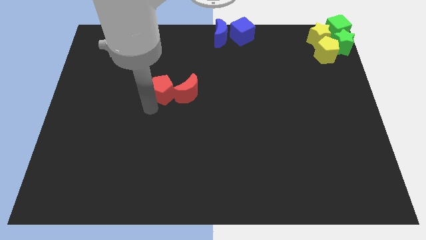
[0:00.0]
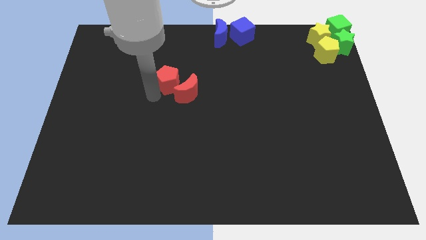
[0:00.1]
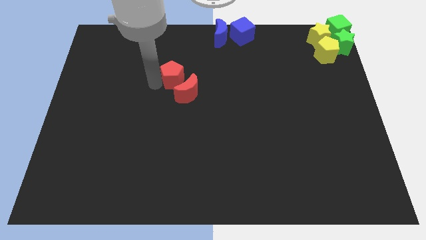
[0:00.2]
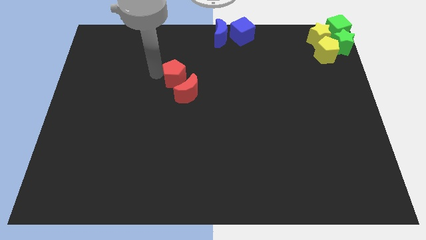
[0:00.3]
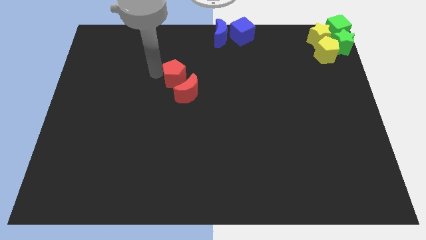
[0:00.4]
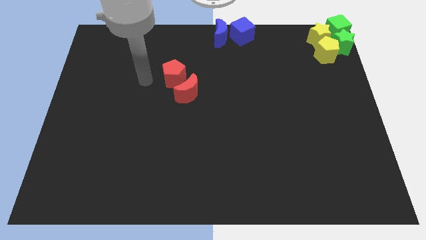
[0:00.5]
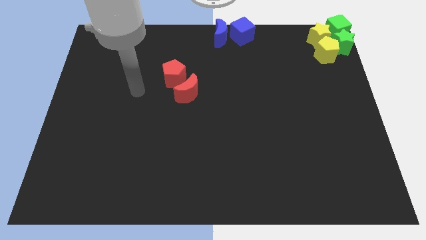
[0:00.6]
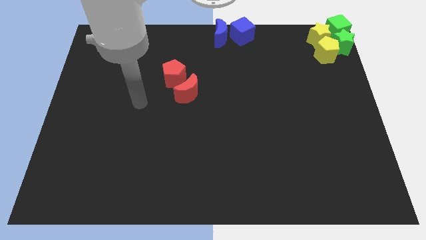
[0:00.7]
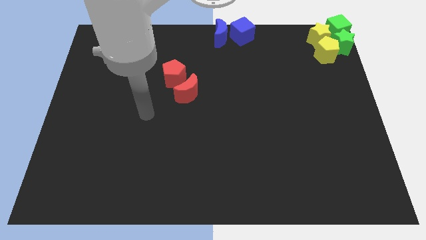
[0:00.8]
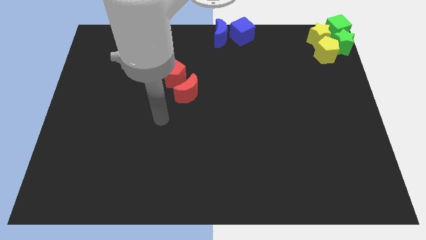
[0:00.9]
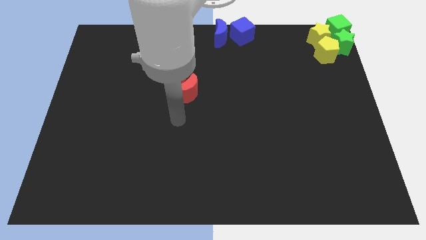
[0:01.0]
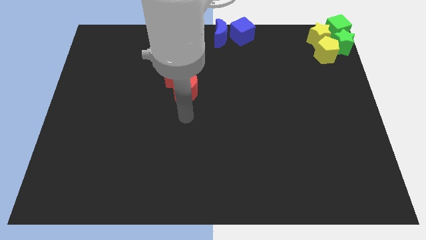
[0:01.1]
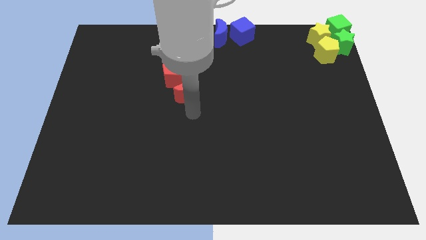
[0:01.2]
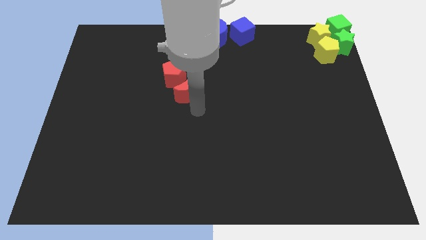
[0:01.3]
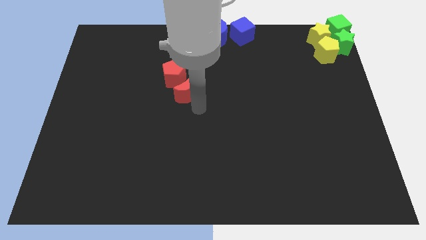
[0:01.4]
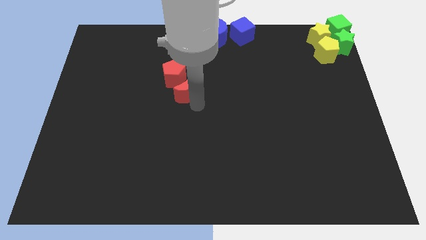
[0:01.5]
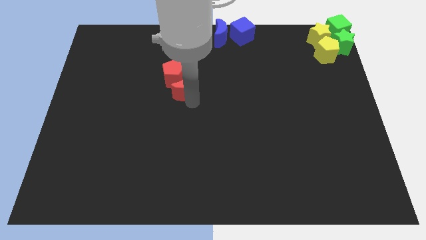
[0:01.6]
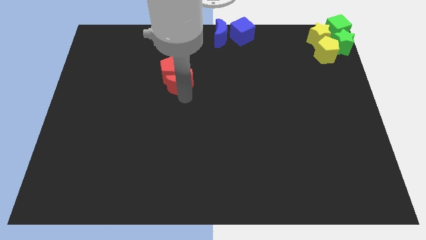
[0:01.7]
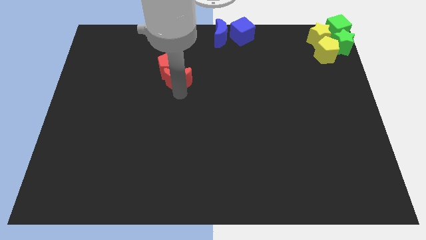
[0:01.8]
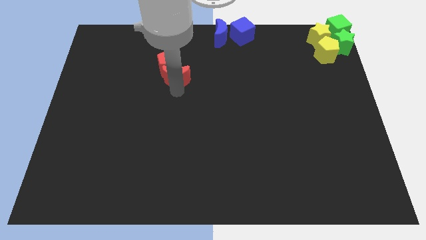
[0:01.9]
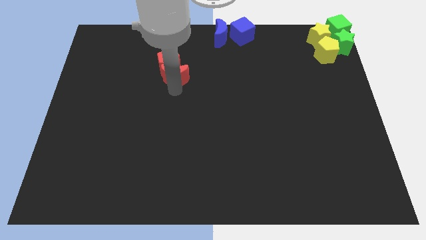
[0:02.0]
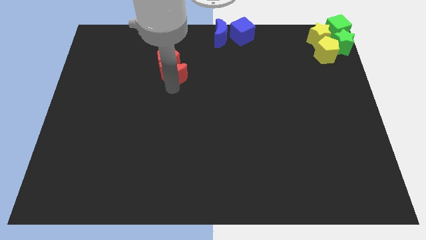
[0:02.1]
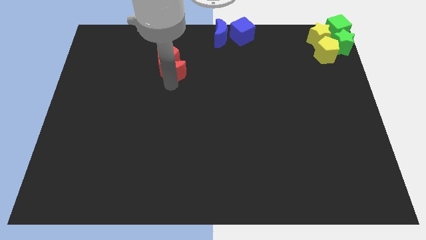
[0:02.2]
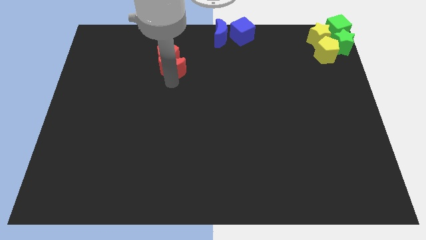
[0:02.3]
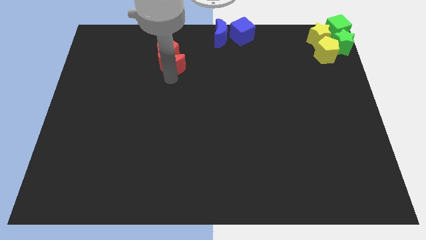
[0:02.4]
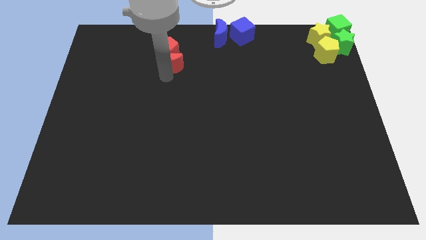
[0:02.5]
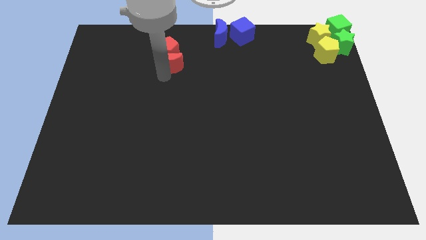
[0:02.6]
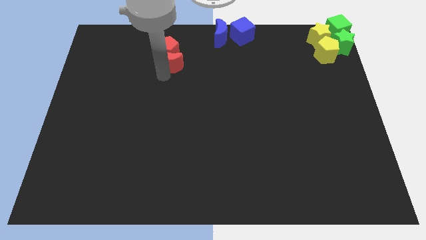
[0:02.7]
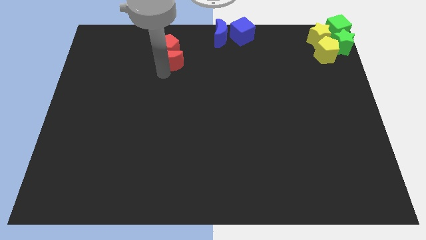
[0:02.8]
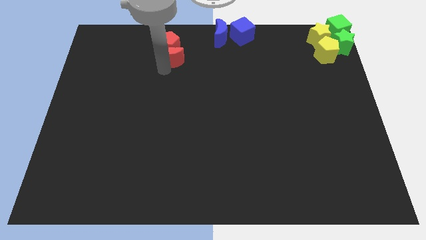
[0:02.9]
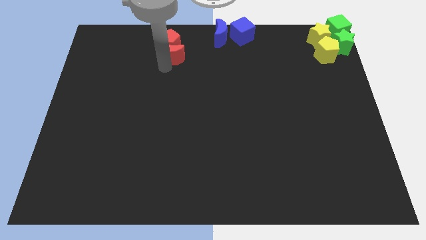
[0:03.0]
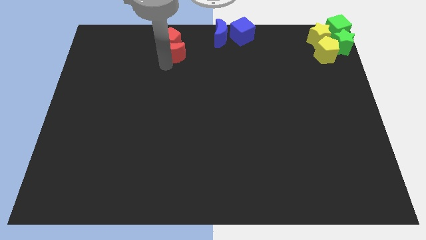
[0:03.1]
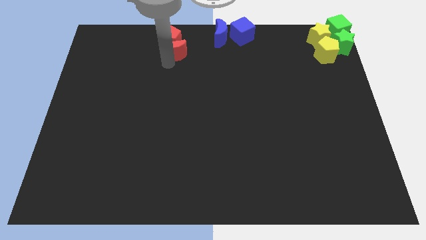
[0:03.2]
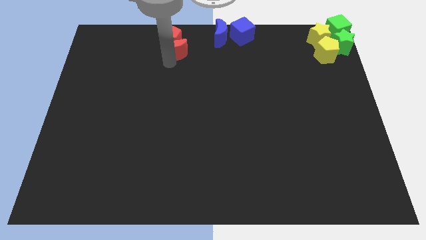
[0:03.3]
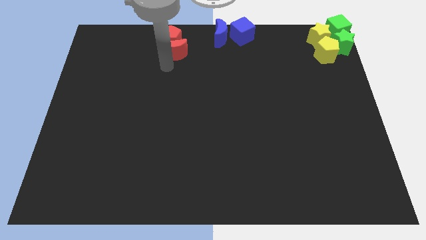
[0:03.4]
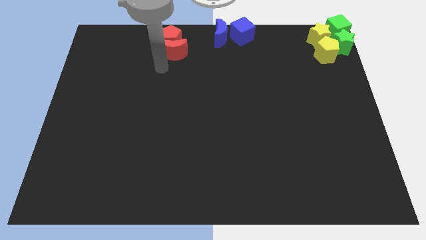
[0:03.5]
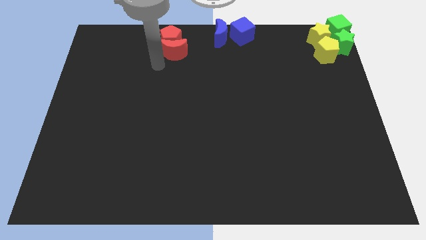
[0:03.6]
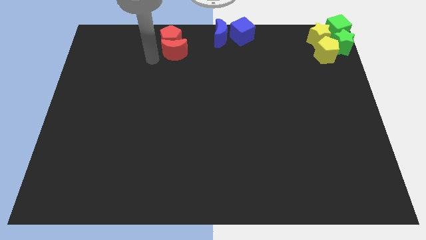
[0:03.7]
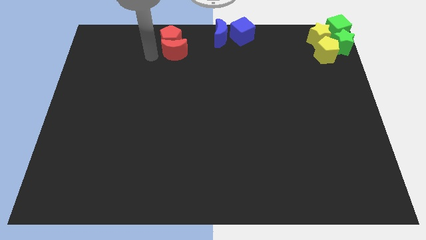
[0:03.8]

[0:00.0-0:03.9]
push both red pentagon and red crescent towards the top center of the board

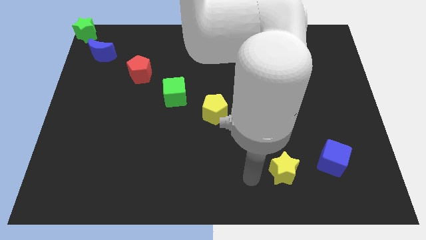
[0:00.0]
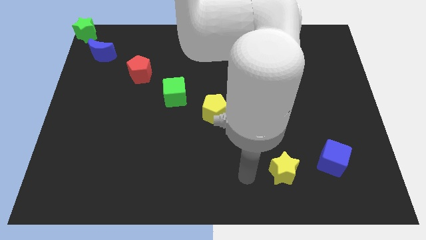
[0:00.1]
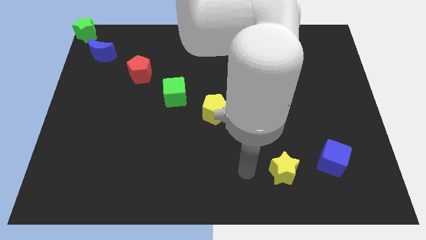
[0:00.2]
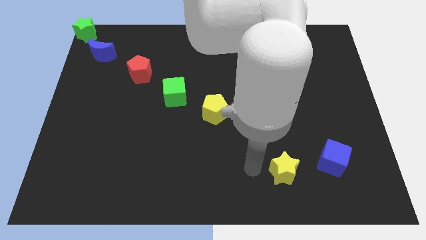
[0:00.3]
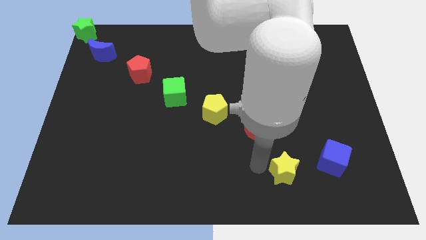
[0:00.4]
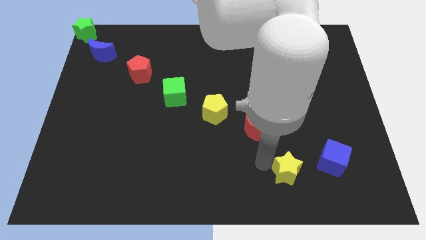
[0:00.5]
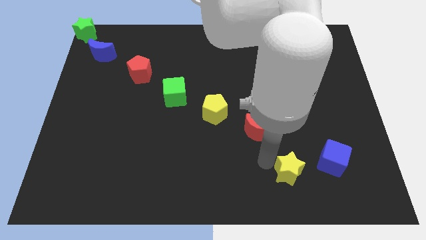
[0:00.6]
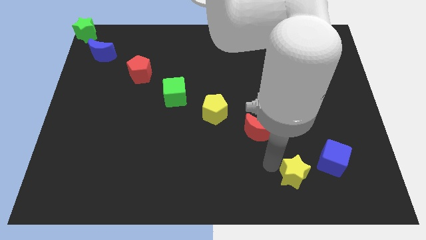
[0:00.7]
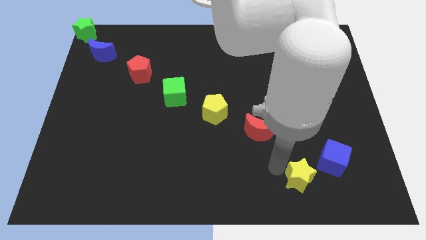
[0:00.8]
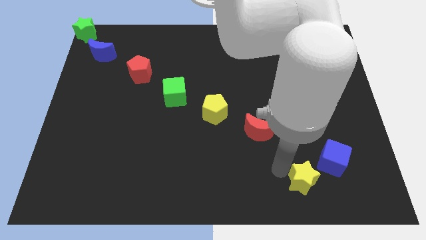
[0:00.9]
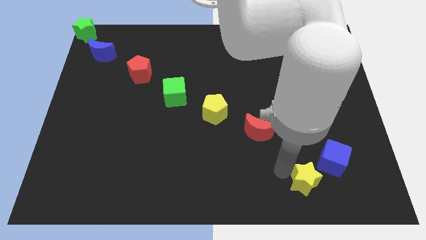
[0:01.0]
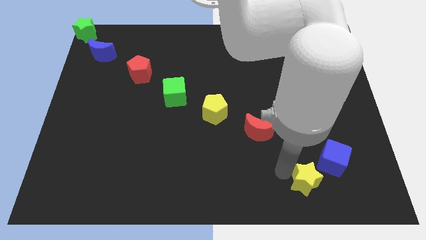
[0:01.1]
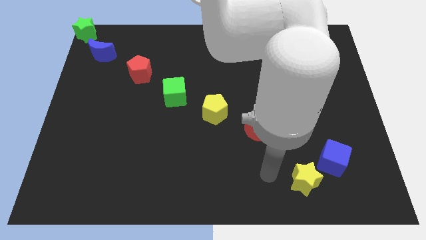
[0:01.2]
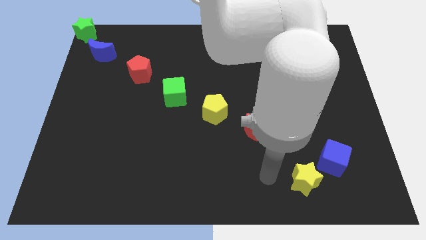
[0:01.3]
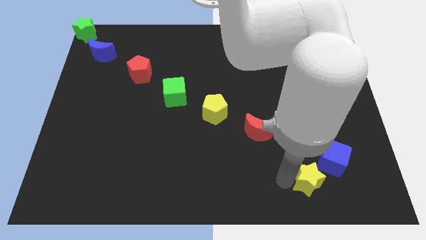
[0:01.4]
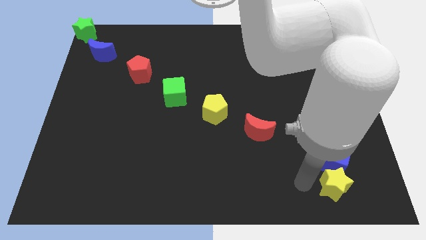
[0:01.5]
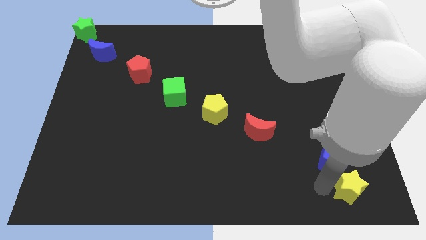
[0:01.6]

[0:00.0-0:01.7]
place the yellow star at the bottom of blue cube

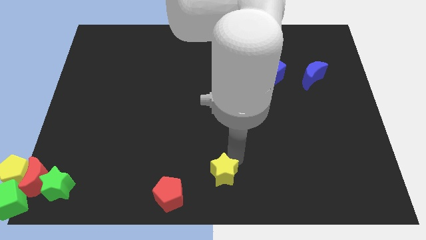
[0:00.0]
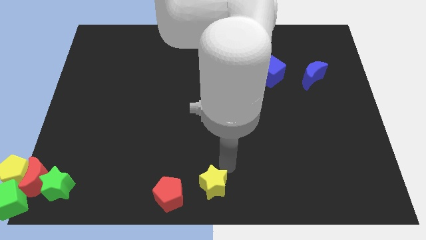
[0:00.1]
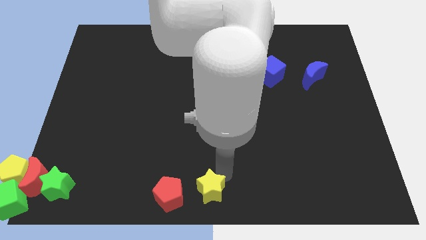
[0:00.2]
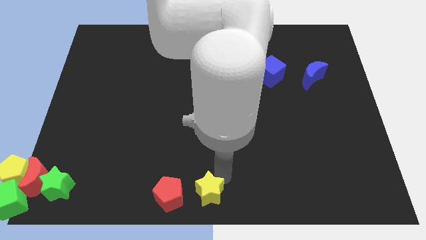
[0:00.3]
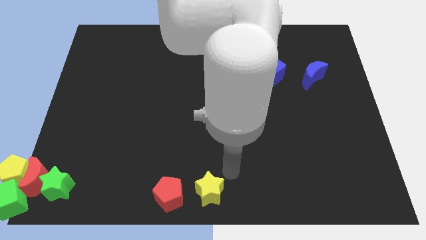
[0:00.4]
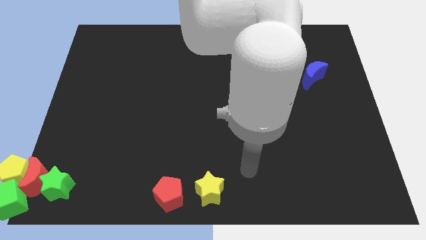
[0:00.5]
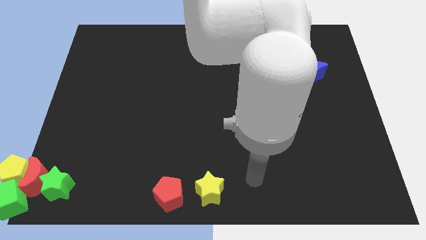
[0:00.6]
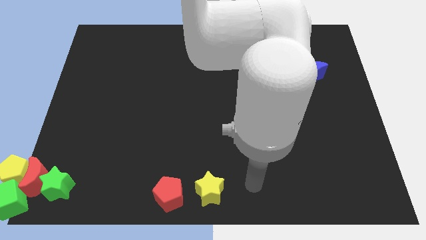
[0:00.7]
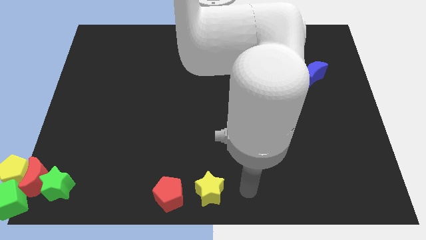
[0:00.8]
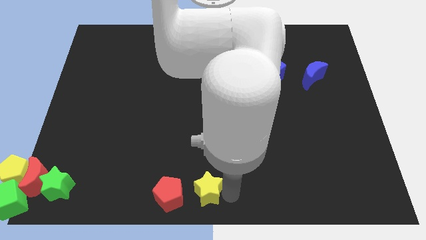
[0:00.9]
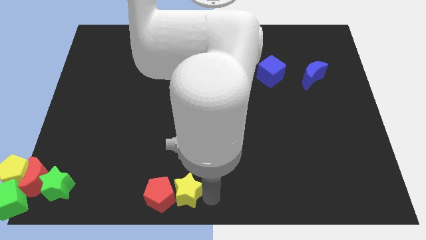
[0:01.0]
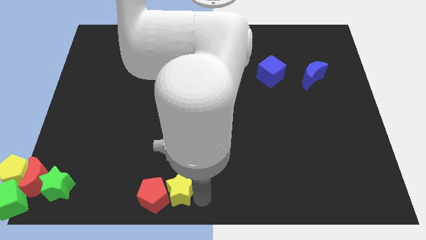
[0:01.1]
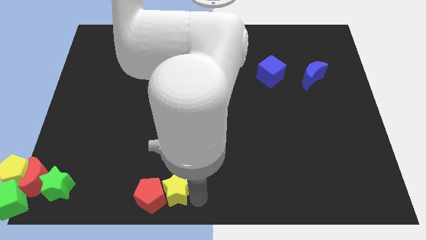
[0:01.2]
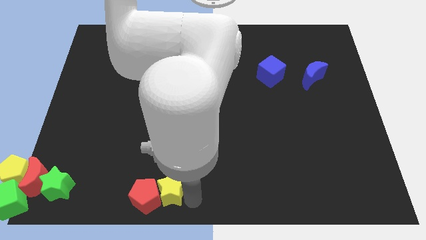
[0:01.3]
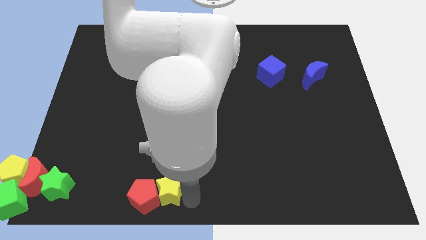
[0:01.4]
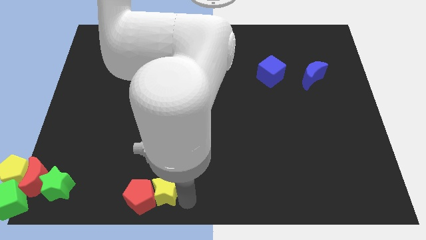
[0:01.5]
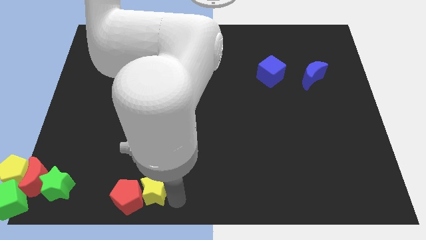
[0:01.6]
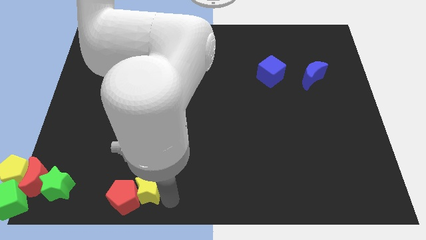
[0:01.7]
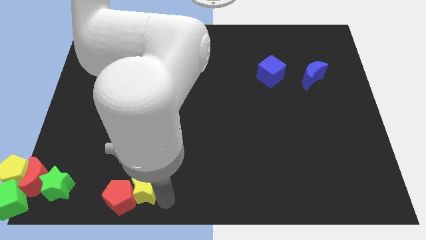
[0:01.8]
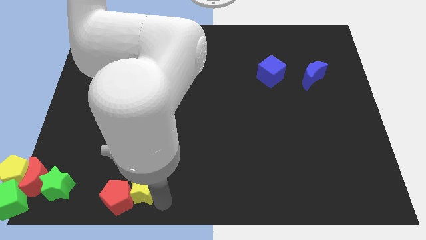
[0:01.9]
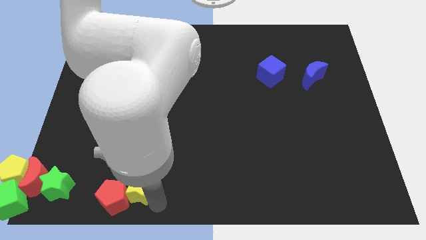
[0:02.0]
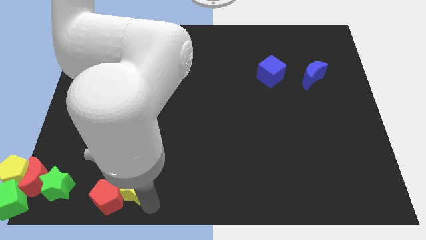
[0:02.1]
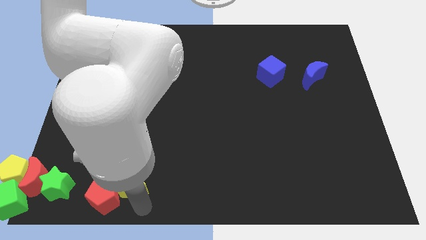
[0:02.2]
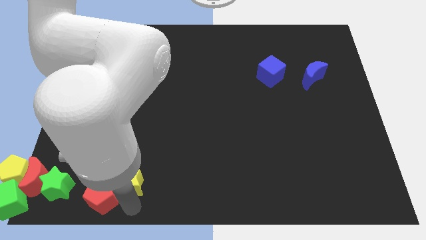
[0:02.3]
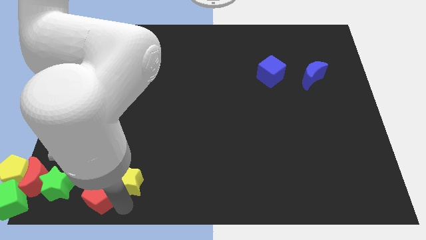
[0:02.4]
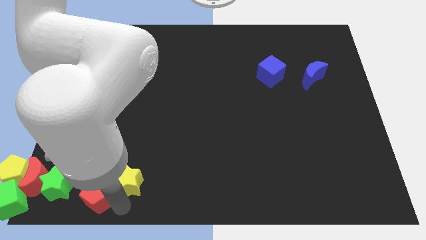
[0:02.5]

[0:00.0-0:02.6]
push the yellow star along with the red pentagon towards the bottom left side of blocks

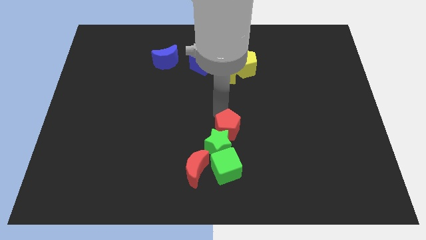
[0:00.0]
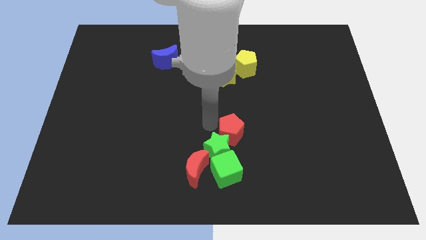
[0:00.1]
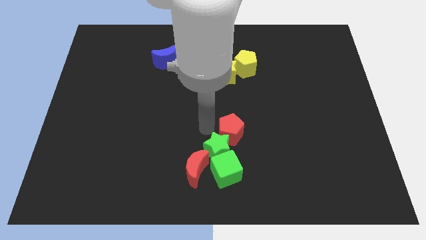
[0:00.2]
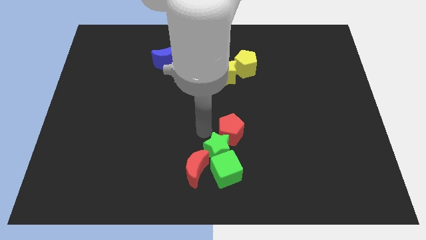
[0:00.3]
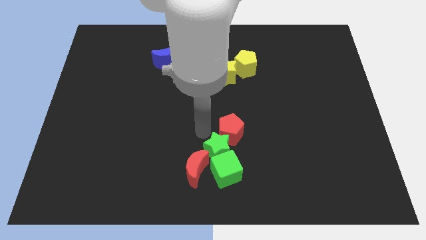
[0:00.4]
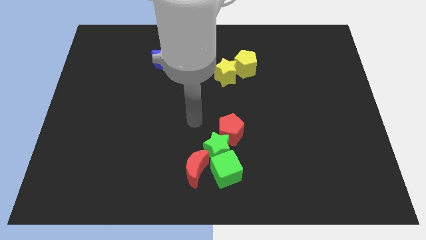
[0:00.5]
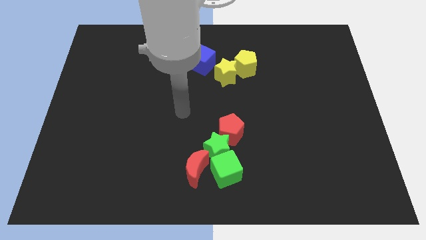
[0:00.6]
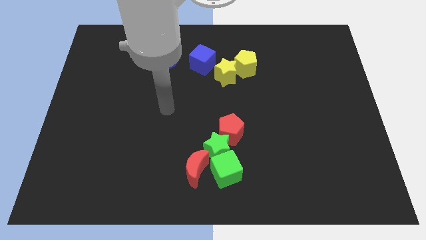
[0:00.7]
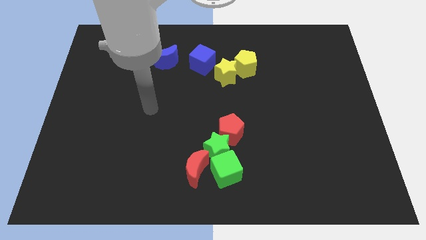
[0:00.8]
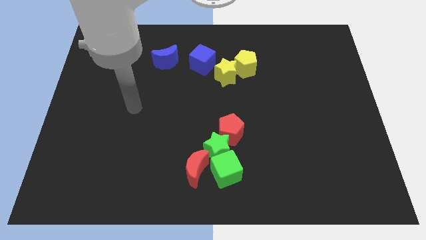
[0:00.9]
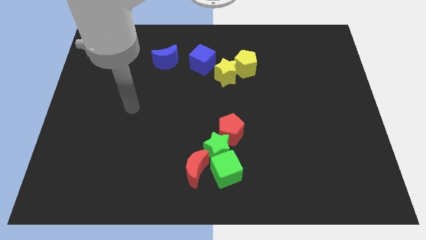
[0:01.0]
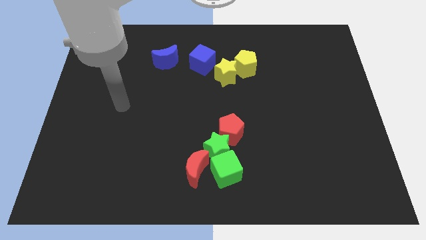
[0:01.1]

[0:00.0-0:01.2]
go away from the red pentagon
